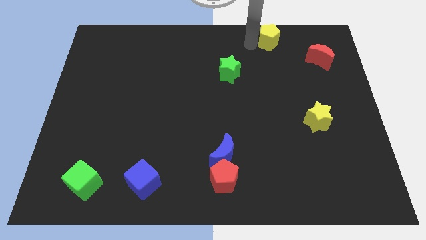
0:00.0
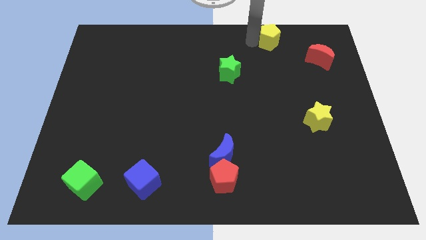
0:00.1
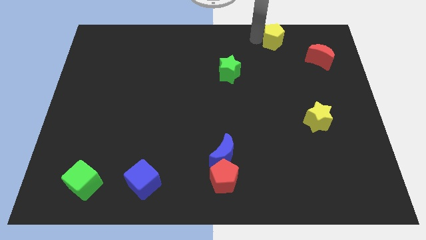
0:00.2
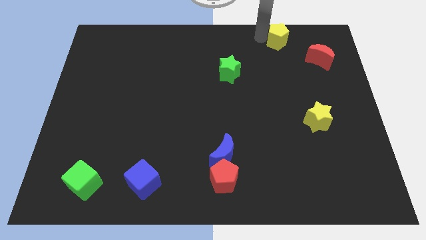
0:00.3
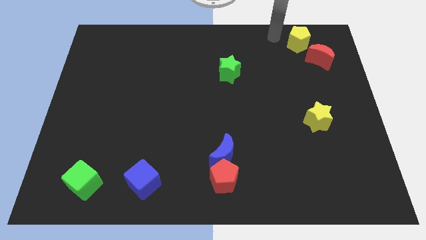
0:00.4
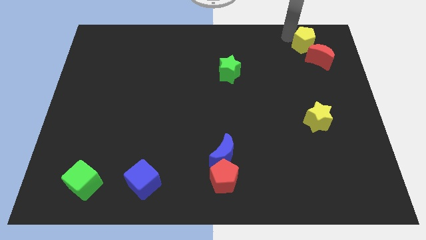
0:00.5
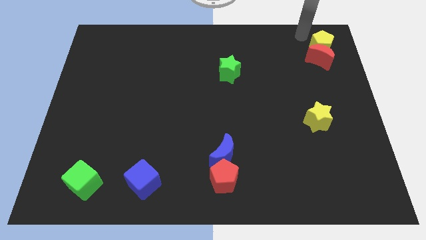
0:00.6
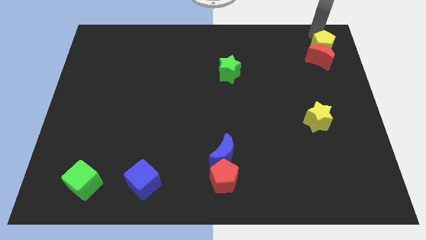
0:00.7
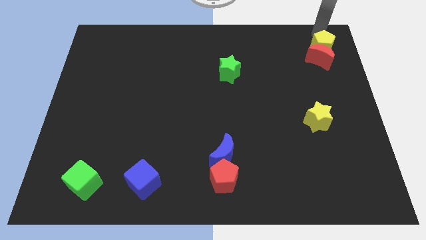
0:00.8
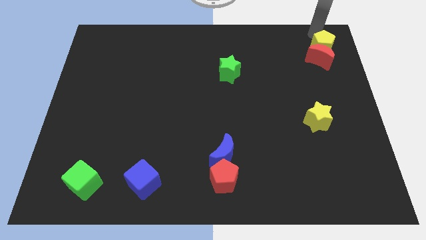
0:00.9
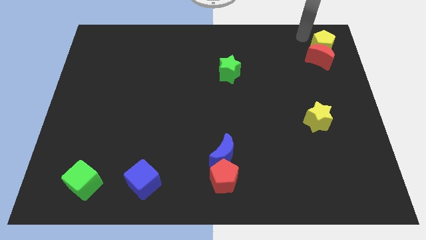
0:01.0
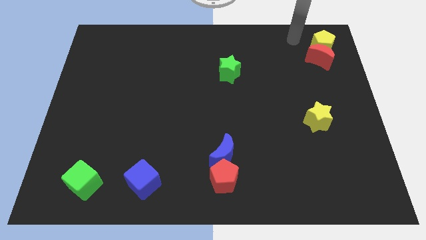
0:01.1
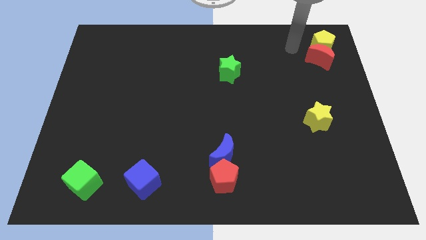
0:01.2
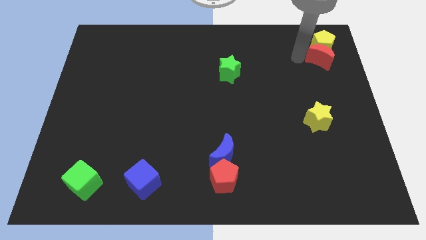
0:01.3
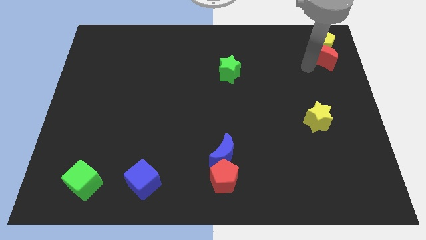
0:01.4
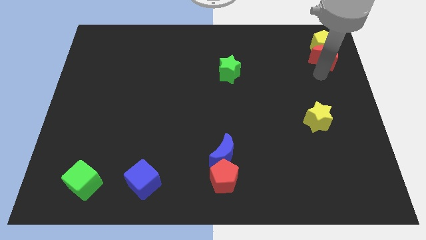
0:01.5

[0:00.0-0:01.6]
place the yellow pentagon above the red moon

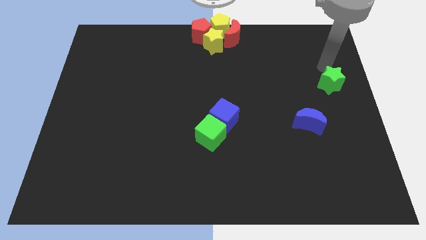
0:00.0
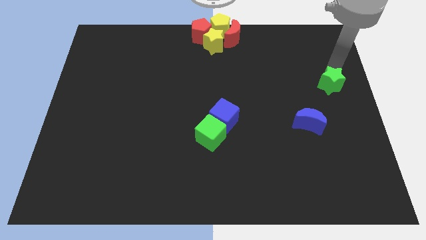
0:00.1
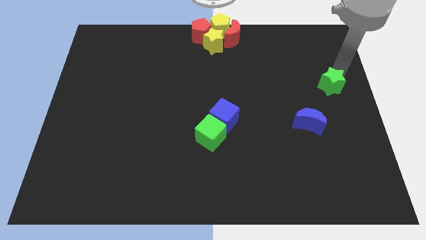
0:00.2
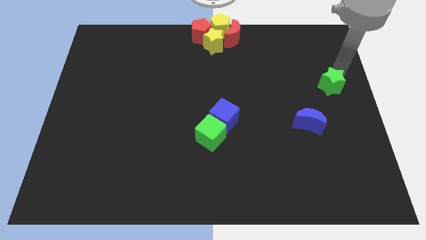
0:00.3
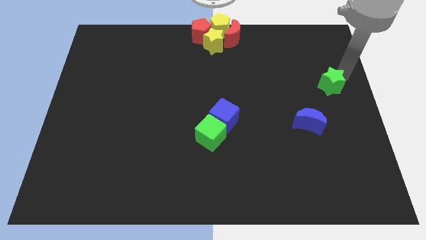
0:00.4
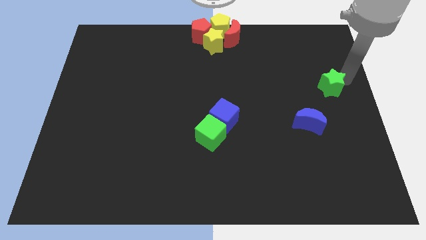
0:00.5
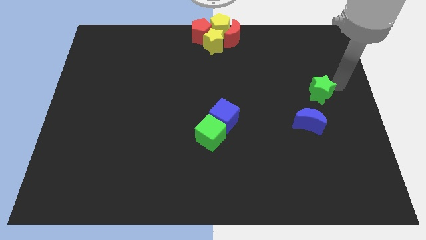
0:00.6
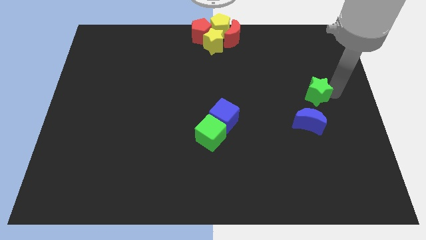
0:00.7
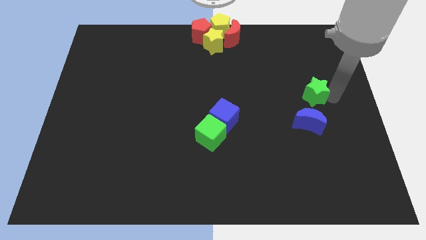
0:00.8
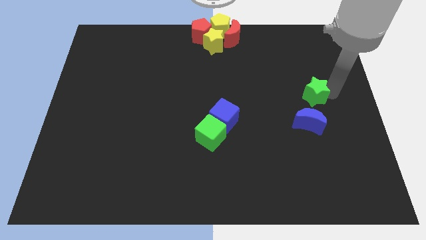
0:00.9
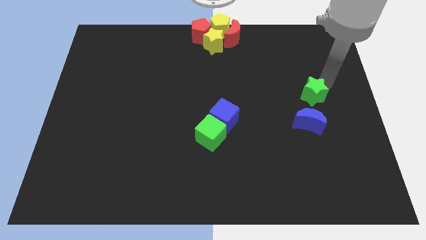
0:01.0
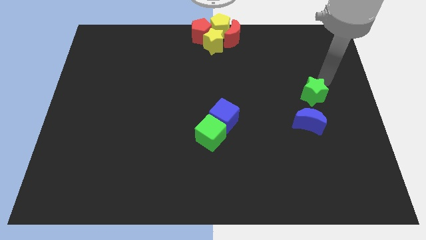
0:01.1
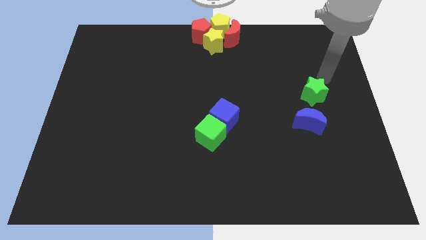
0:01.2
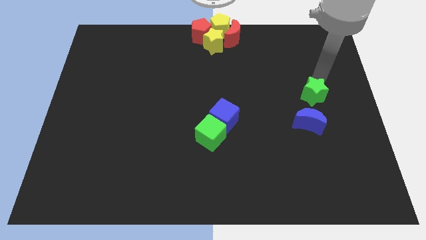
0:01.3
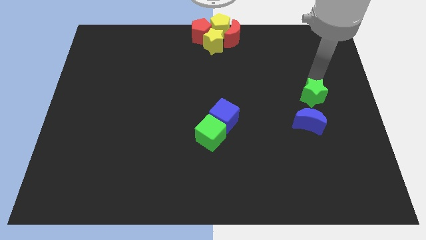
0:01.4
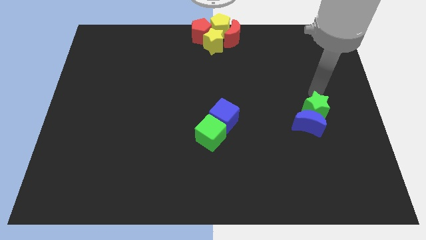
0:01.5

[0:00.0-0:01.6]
move the green star into top of blue moon

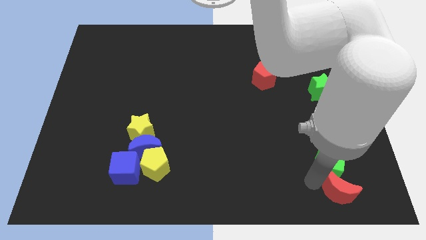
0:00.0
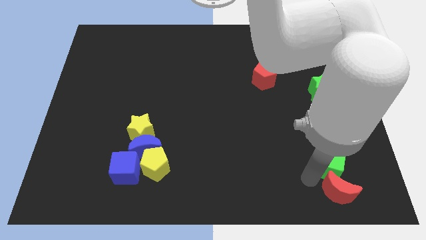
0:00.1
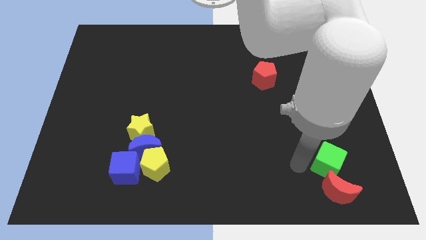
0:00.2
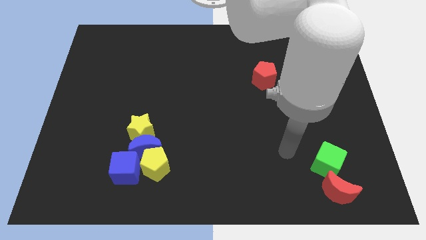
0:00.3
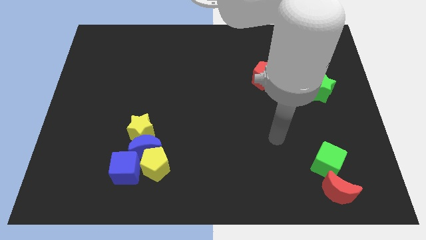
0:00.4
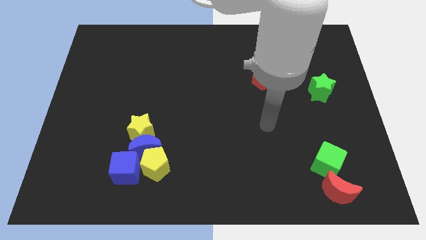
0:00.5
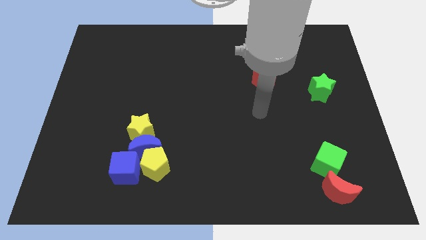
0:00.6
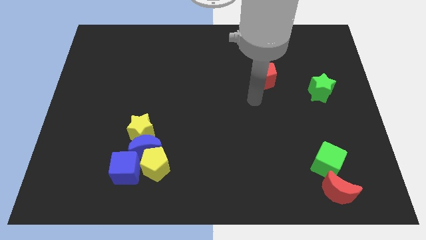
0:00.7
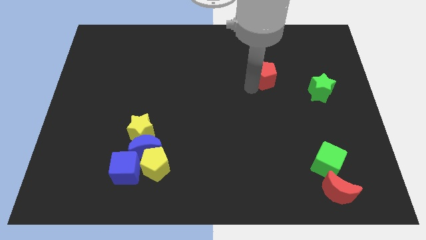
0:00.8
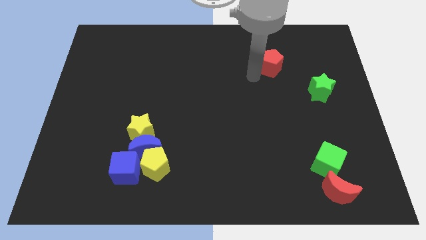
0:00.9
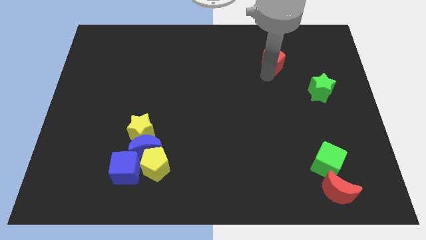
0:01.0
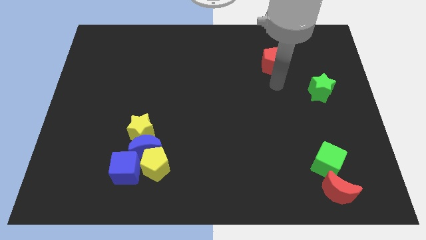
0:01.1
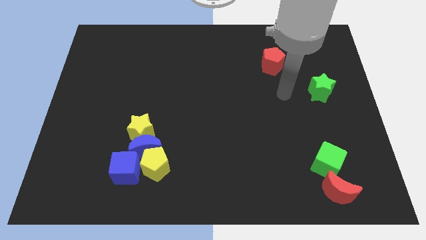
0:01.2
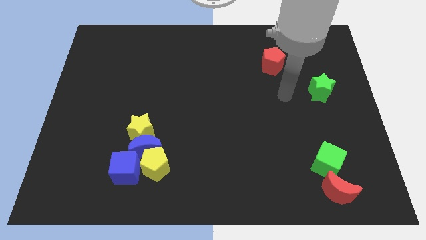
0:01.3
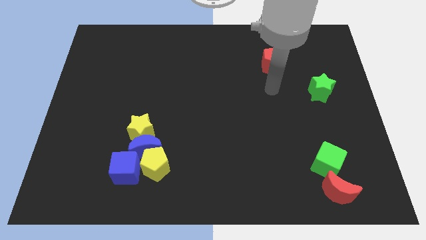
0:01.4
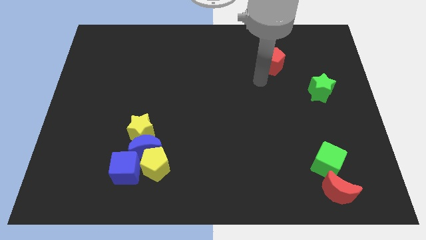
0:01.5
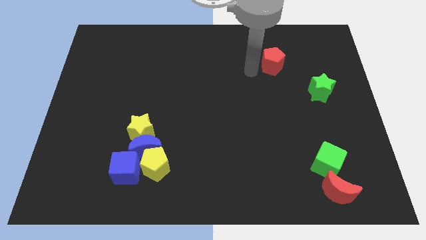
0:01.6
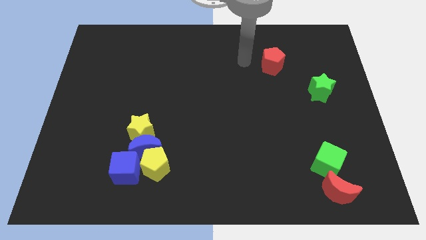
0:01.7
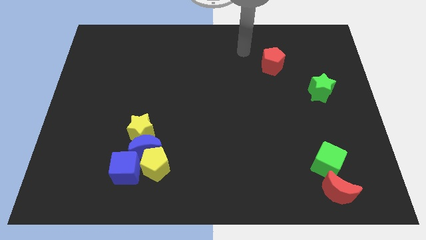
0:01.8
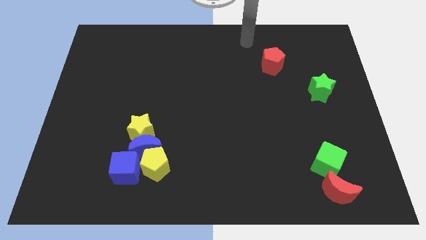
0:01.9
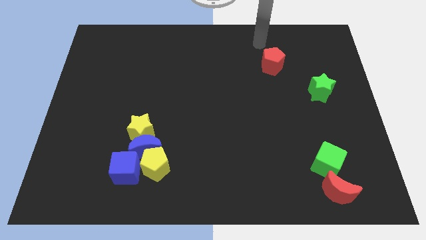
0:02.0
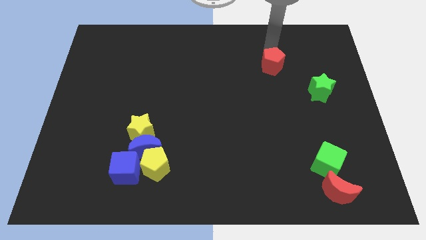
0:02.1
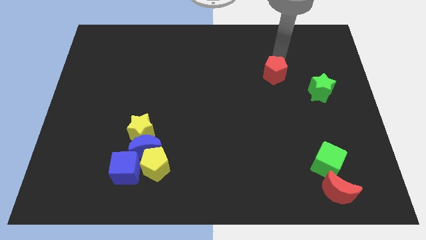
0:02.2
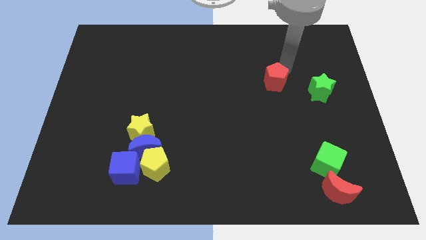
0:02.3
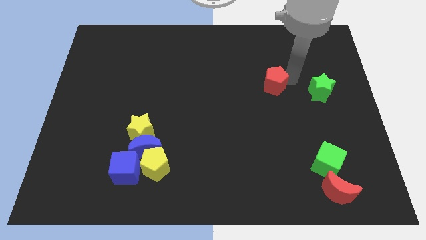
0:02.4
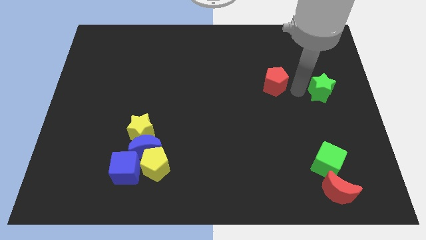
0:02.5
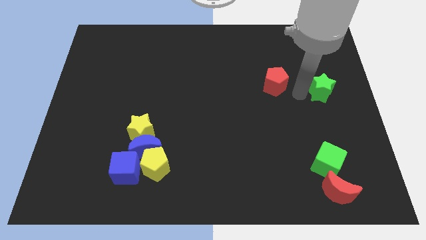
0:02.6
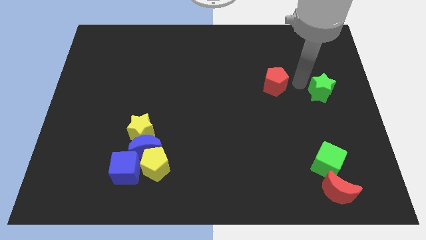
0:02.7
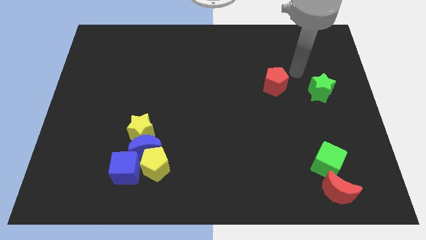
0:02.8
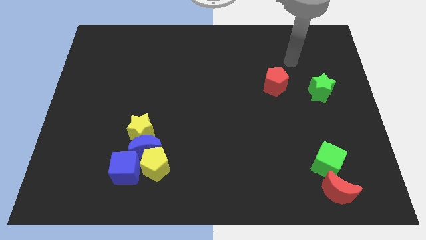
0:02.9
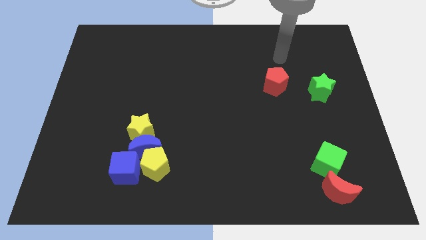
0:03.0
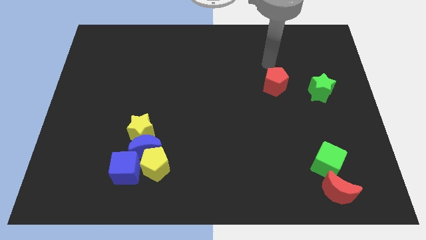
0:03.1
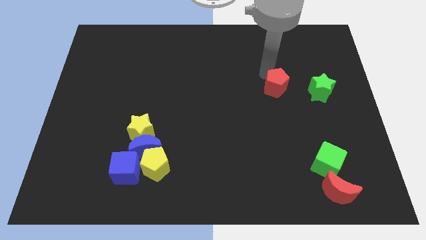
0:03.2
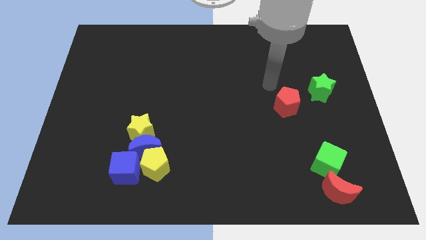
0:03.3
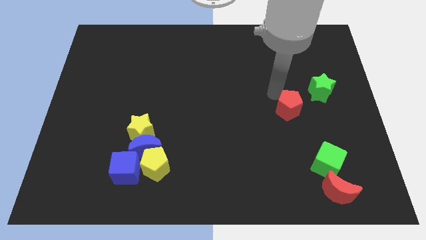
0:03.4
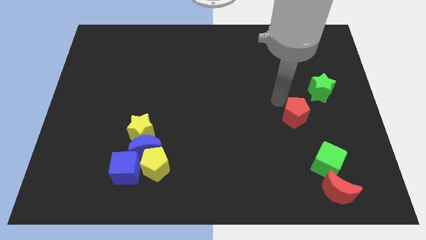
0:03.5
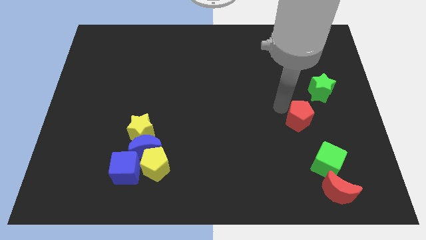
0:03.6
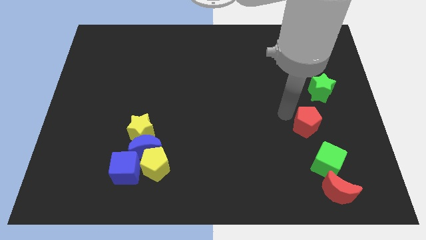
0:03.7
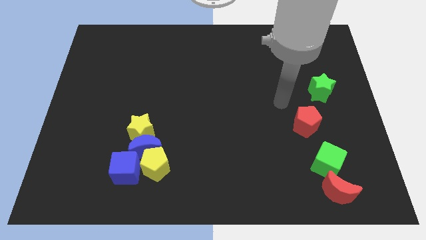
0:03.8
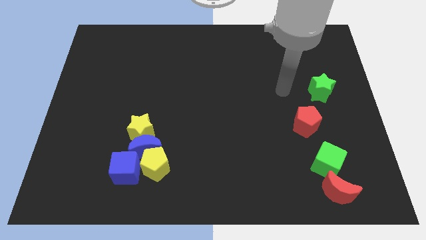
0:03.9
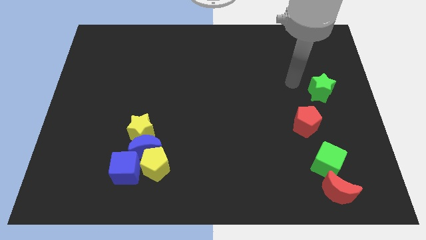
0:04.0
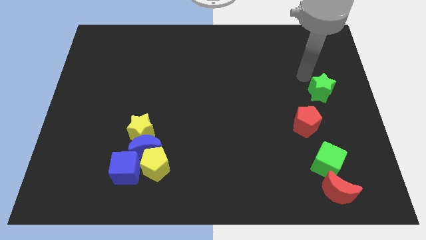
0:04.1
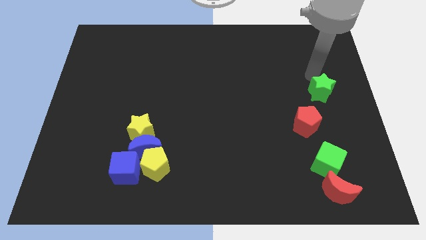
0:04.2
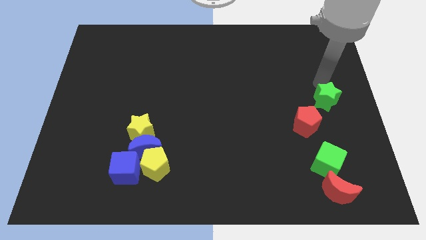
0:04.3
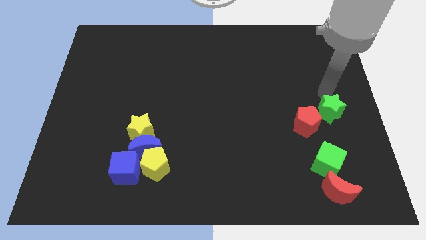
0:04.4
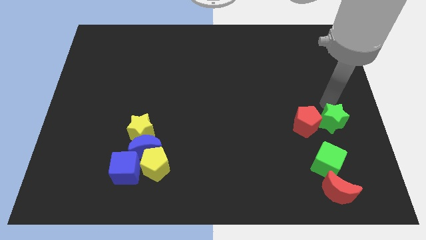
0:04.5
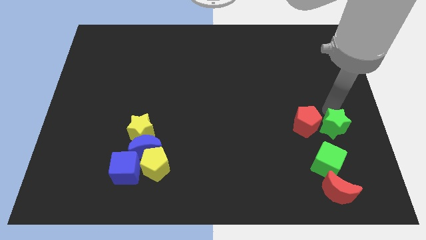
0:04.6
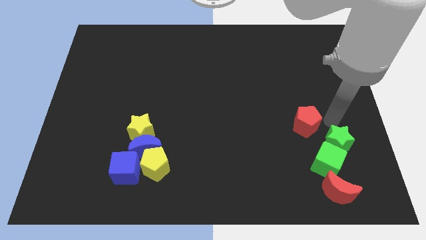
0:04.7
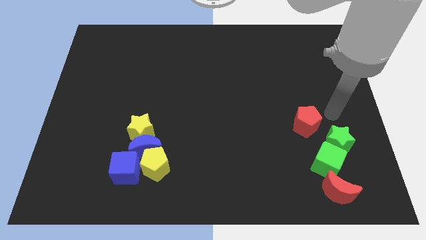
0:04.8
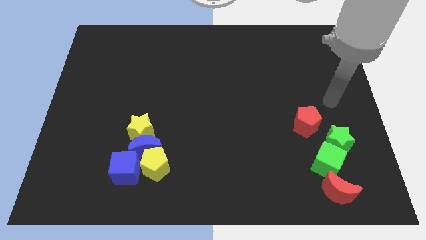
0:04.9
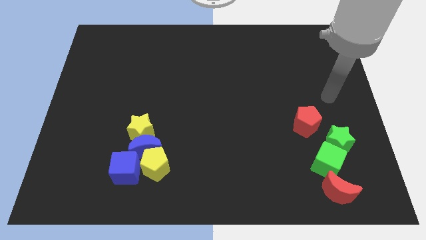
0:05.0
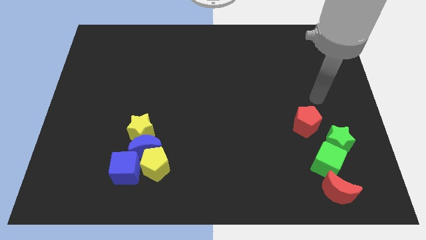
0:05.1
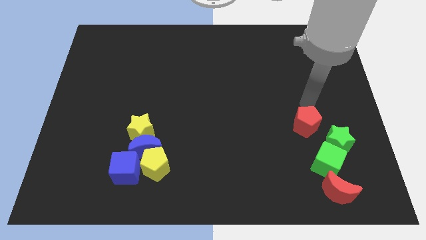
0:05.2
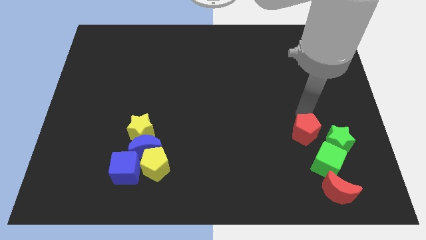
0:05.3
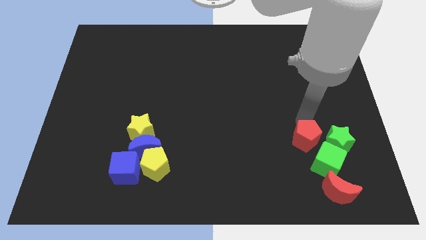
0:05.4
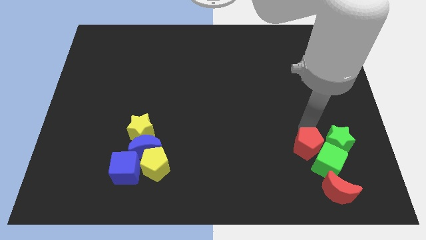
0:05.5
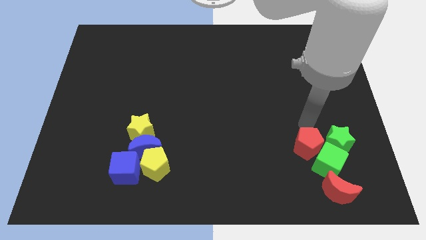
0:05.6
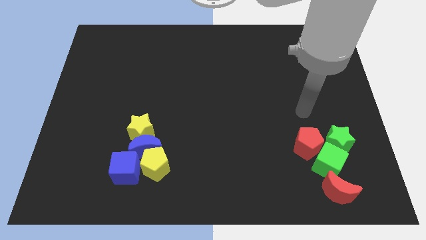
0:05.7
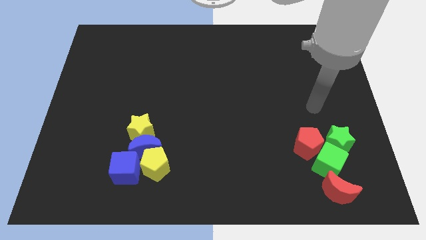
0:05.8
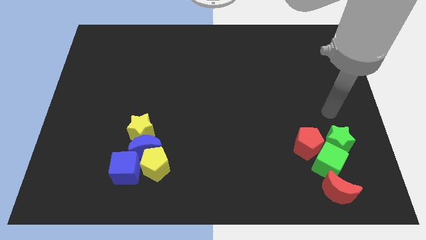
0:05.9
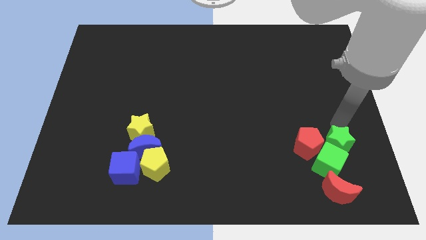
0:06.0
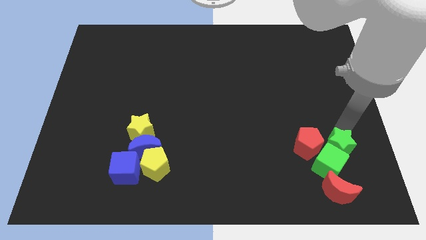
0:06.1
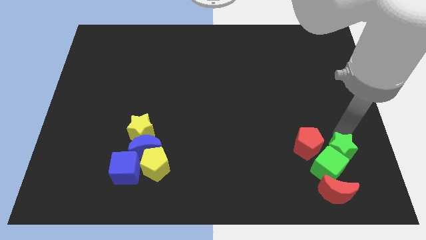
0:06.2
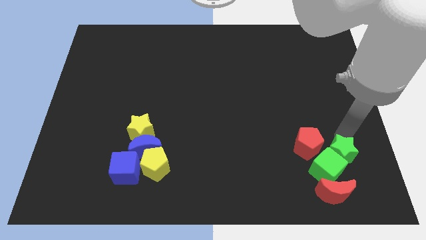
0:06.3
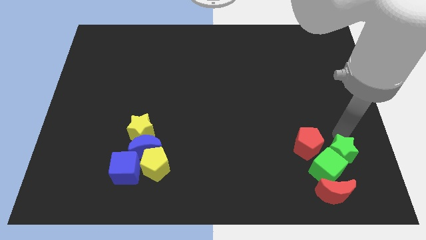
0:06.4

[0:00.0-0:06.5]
group up the green blocks and red blocks at the bottom right of th etable
